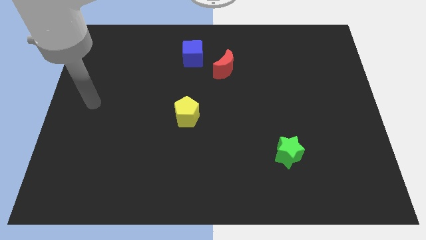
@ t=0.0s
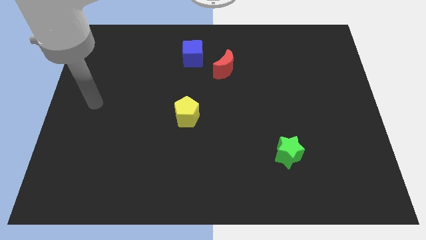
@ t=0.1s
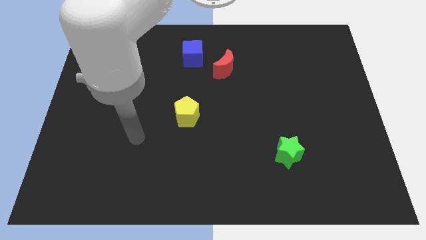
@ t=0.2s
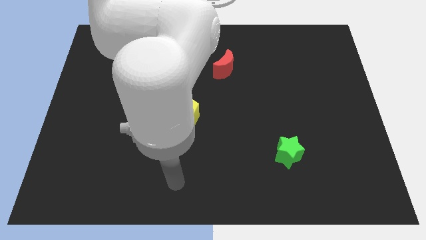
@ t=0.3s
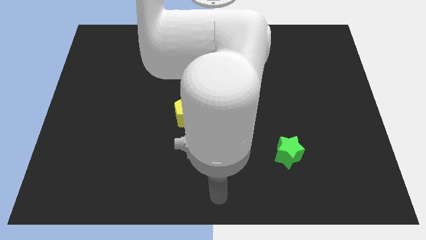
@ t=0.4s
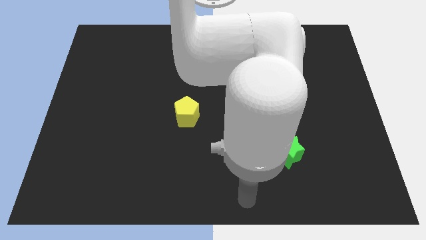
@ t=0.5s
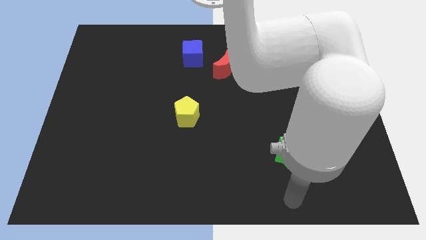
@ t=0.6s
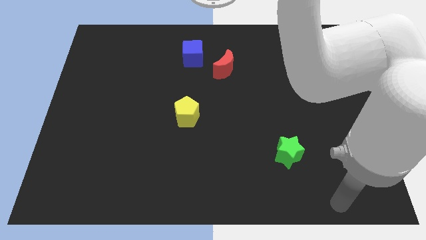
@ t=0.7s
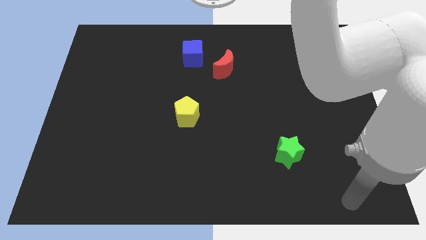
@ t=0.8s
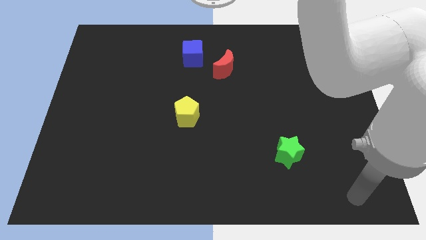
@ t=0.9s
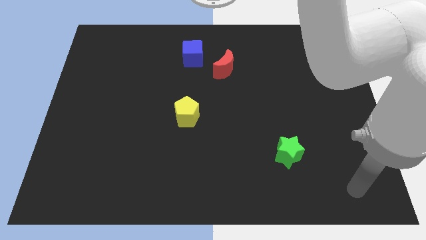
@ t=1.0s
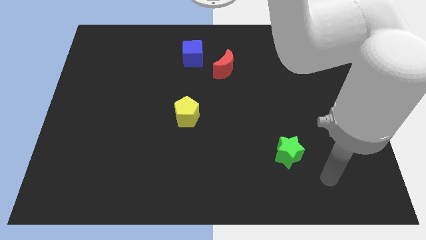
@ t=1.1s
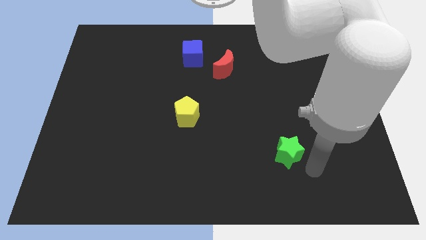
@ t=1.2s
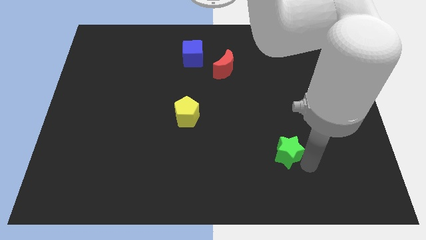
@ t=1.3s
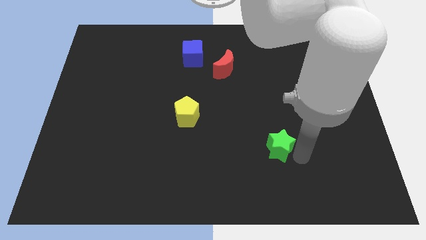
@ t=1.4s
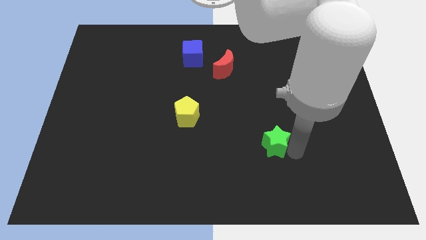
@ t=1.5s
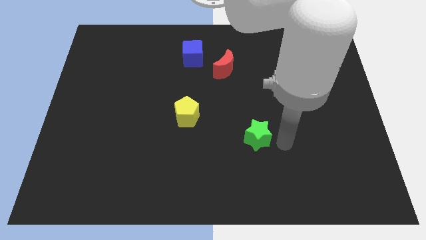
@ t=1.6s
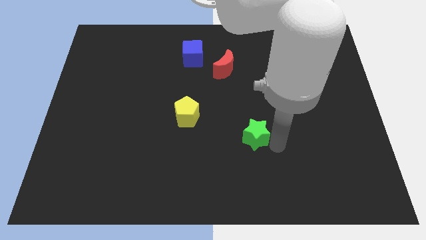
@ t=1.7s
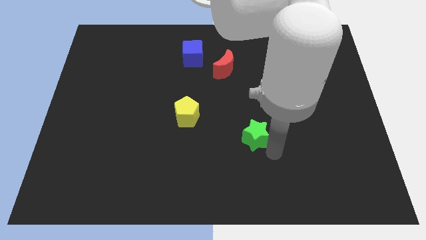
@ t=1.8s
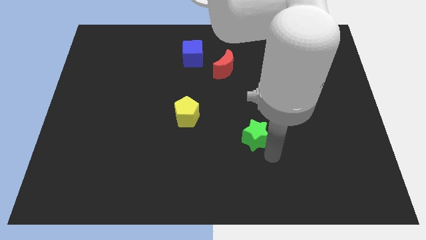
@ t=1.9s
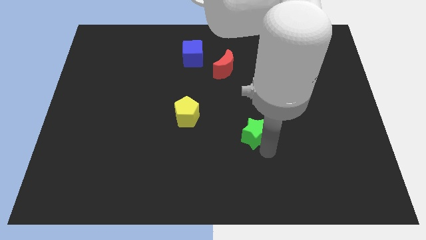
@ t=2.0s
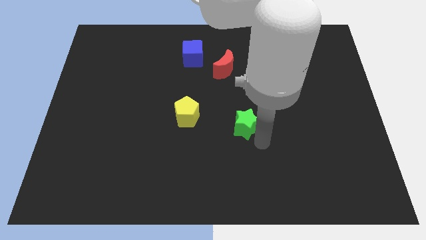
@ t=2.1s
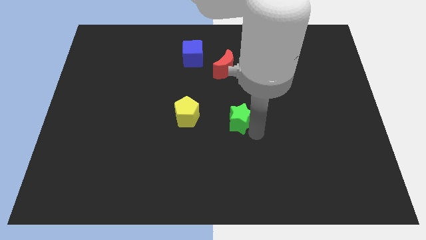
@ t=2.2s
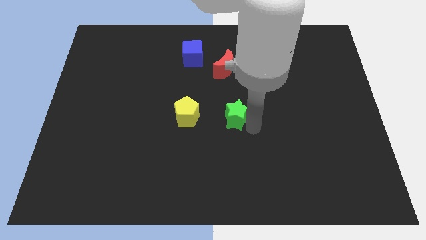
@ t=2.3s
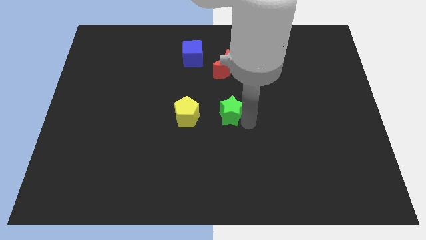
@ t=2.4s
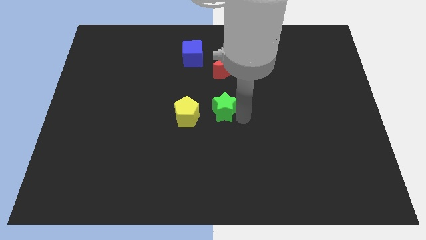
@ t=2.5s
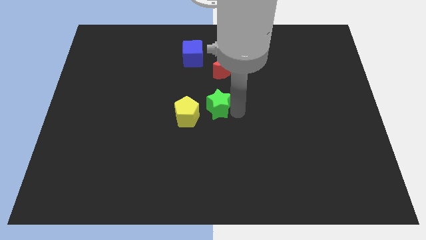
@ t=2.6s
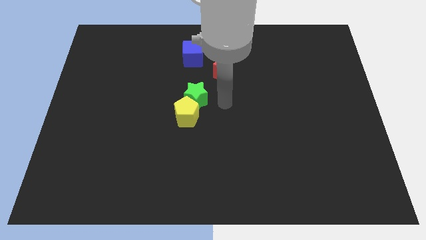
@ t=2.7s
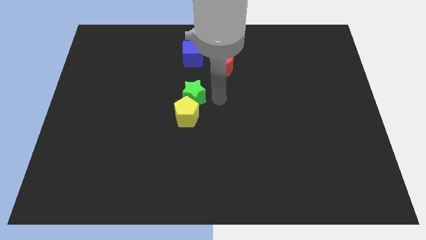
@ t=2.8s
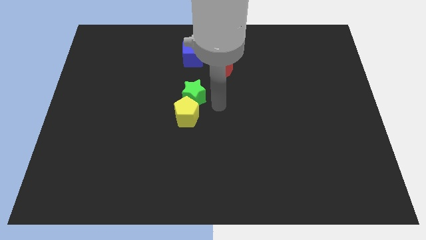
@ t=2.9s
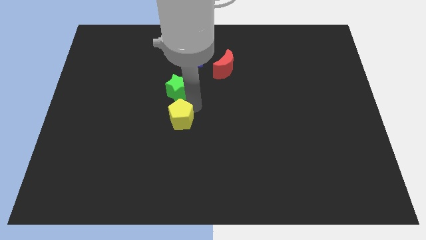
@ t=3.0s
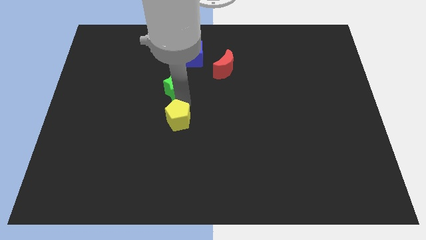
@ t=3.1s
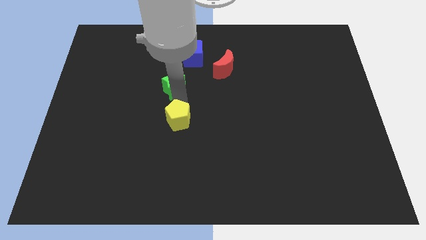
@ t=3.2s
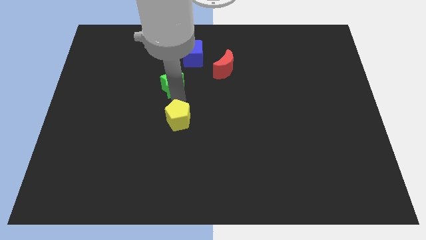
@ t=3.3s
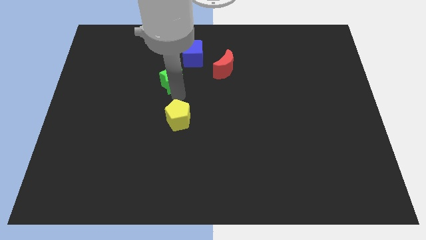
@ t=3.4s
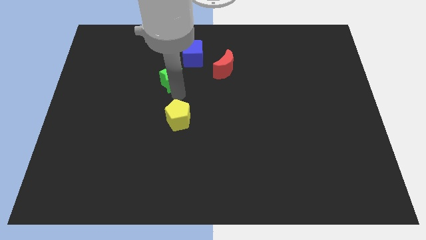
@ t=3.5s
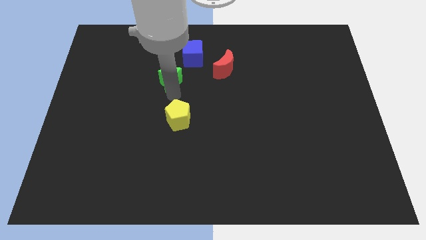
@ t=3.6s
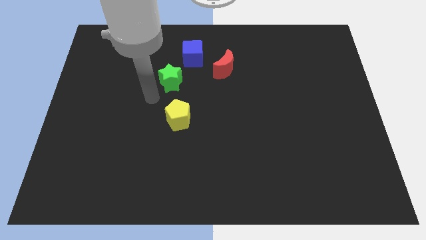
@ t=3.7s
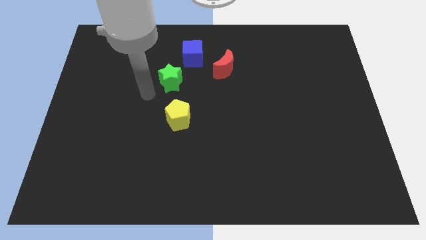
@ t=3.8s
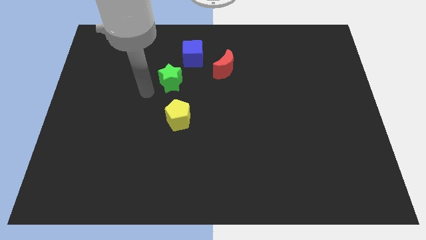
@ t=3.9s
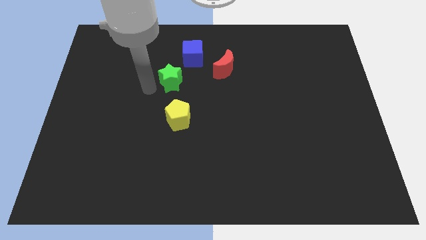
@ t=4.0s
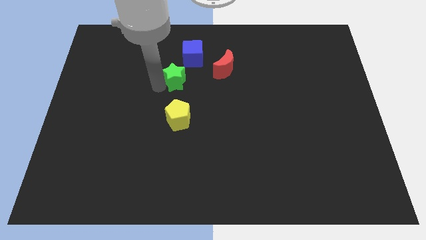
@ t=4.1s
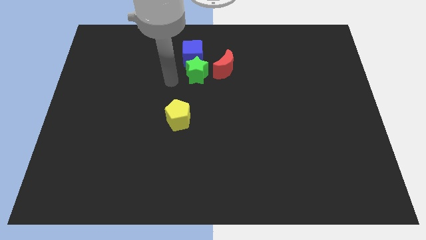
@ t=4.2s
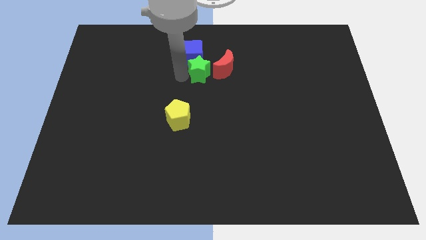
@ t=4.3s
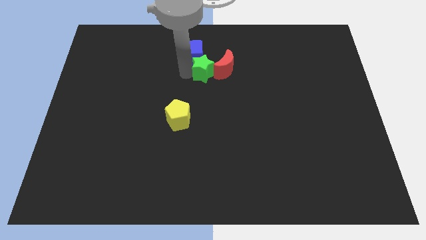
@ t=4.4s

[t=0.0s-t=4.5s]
push the star next to the blue block

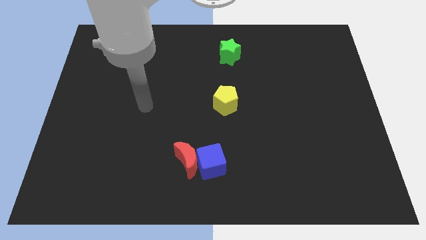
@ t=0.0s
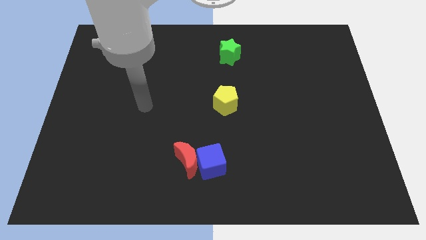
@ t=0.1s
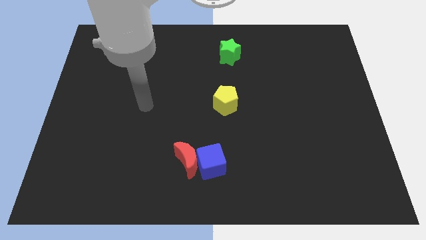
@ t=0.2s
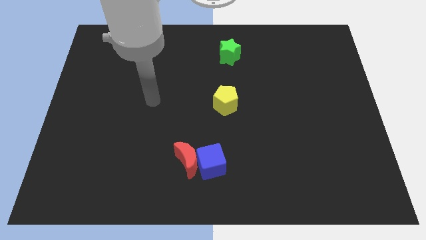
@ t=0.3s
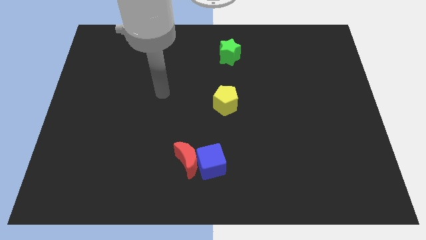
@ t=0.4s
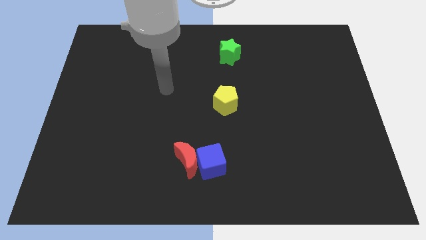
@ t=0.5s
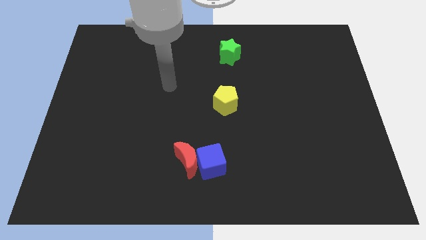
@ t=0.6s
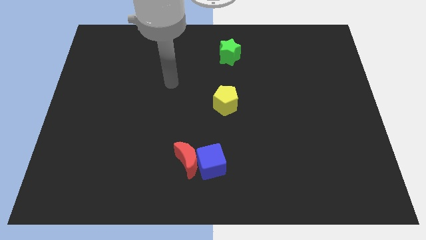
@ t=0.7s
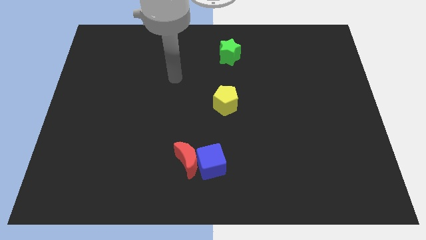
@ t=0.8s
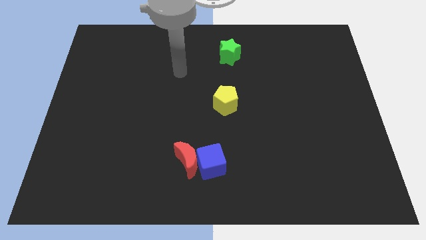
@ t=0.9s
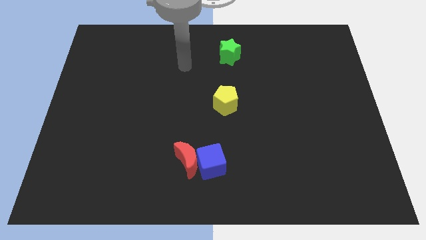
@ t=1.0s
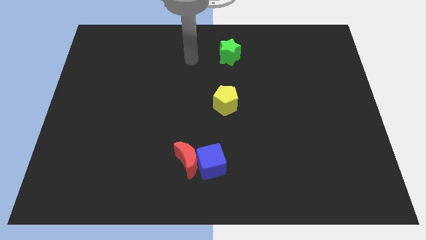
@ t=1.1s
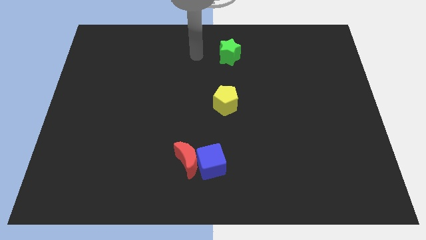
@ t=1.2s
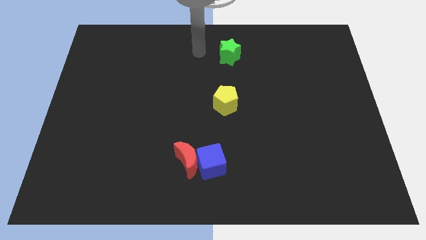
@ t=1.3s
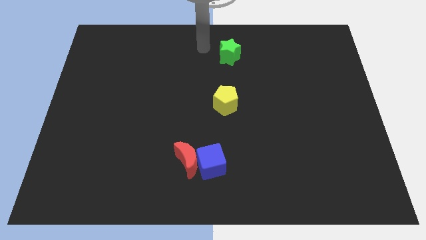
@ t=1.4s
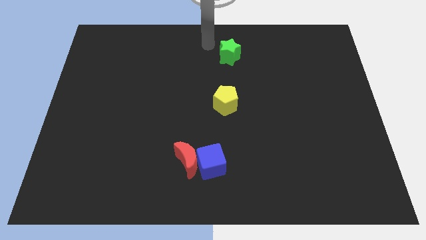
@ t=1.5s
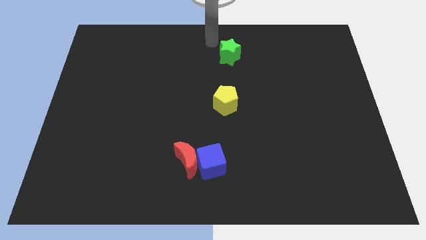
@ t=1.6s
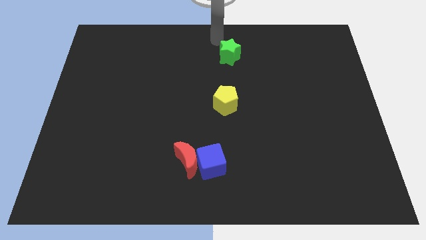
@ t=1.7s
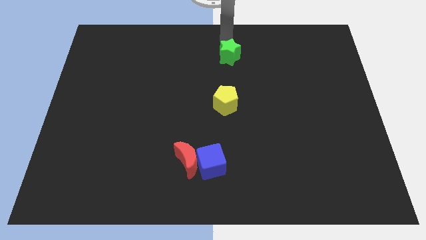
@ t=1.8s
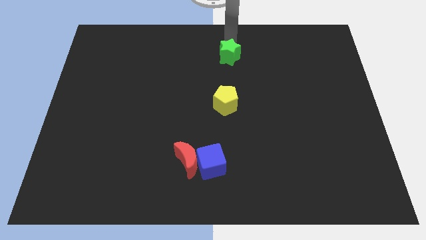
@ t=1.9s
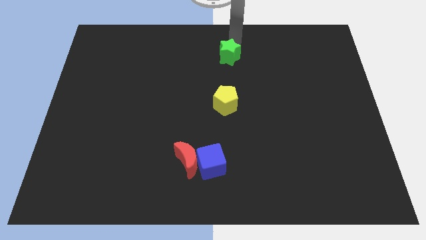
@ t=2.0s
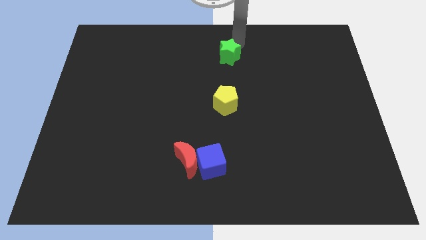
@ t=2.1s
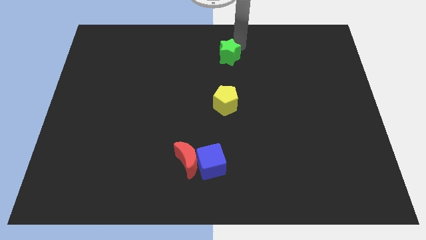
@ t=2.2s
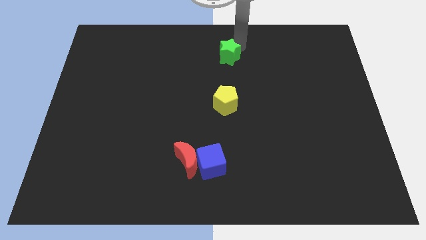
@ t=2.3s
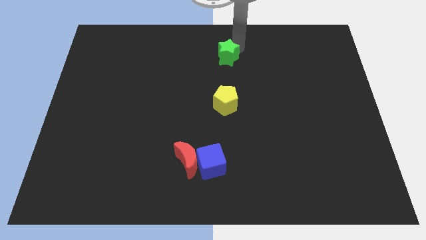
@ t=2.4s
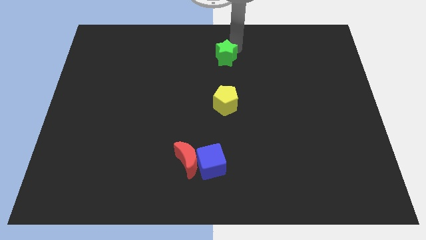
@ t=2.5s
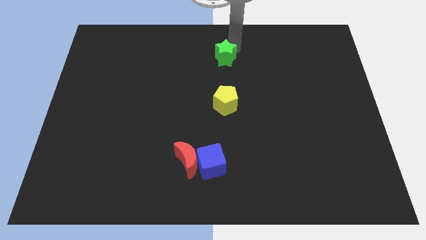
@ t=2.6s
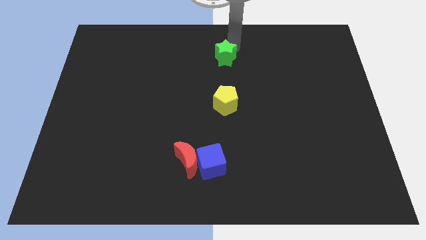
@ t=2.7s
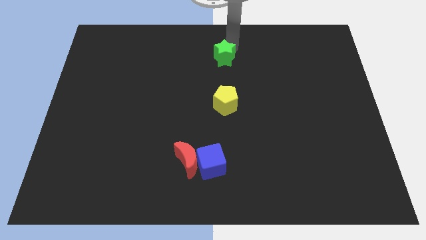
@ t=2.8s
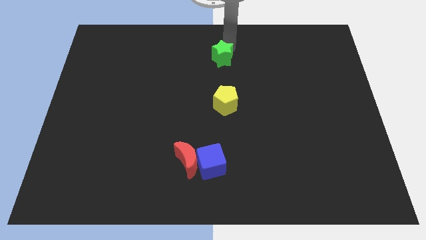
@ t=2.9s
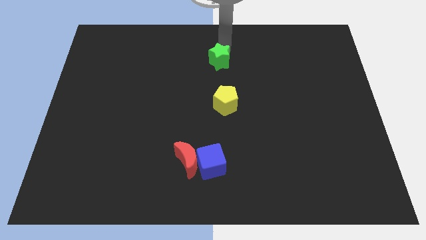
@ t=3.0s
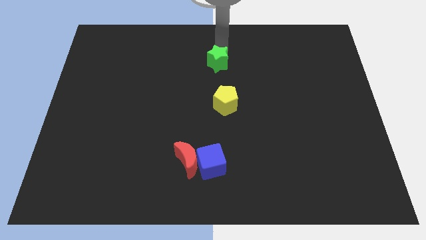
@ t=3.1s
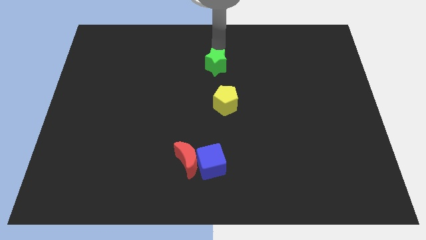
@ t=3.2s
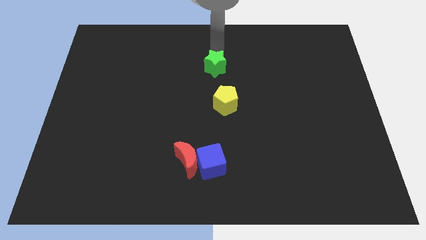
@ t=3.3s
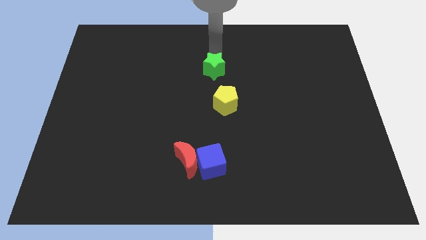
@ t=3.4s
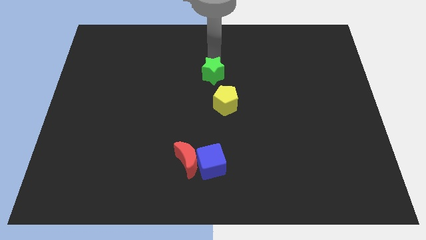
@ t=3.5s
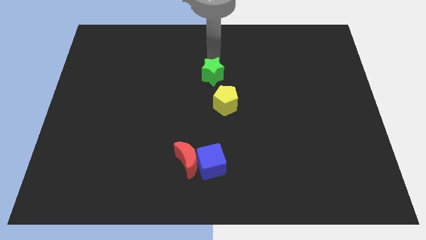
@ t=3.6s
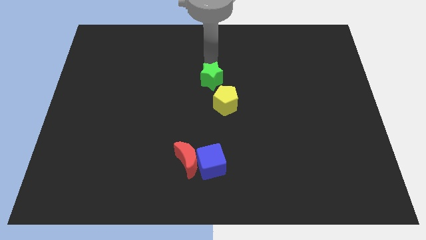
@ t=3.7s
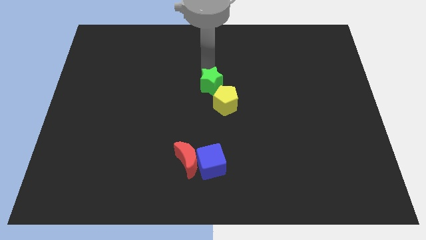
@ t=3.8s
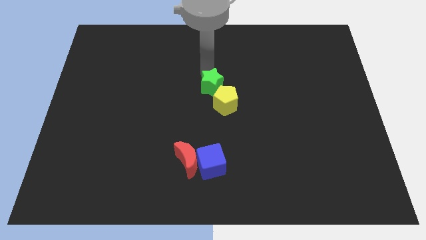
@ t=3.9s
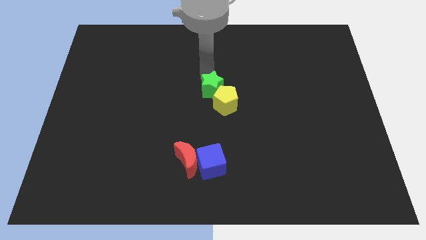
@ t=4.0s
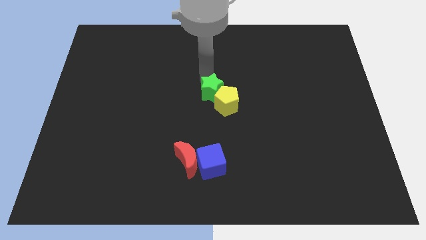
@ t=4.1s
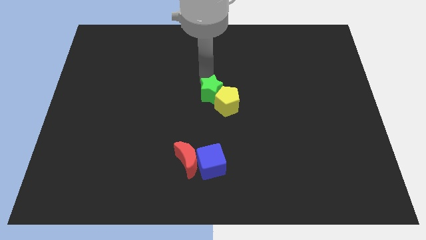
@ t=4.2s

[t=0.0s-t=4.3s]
slide the star close to the yellow pentagon
